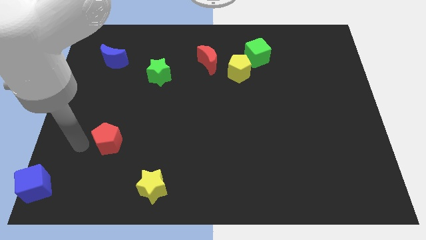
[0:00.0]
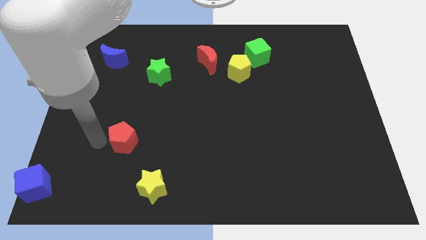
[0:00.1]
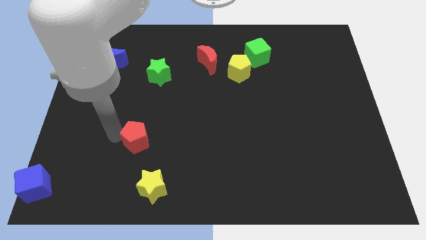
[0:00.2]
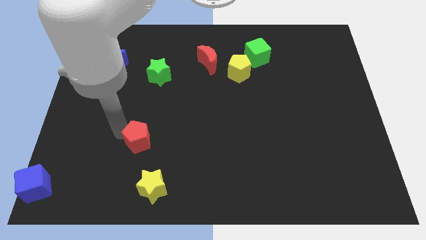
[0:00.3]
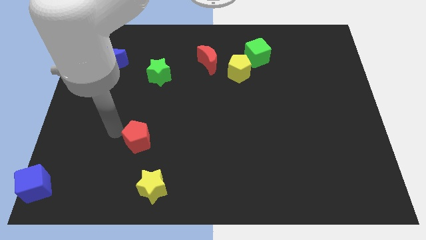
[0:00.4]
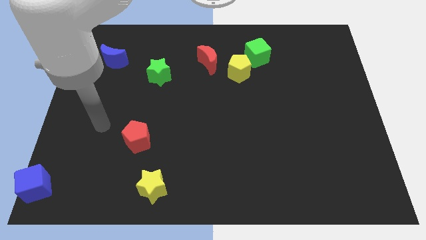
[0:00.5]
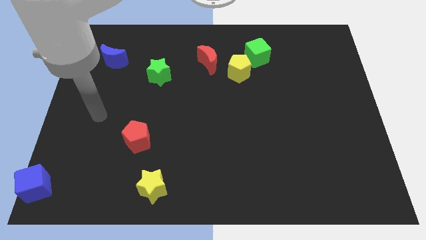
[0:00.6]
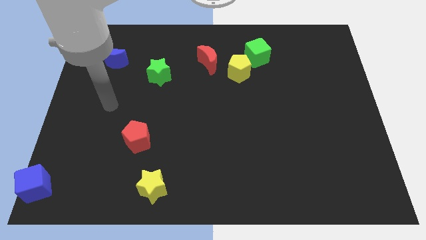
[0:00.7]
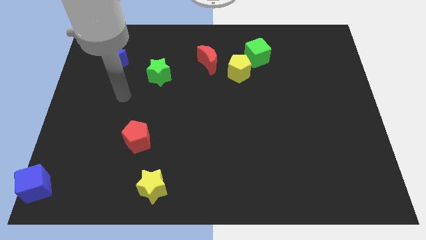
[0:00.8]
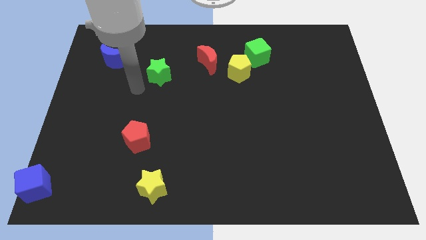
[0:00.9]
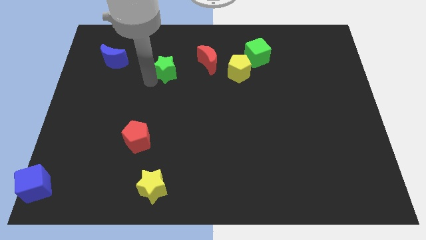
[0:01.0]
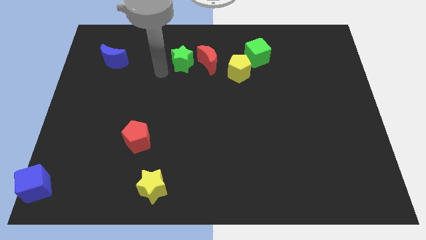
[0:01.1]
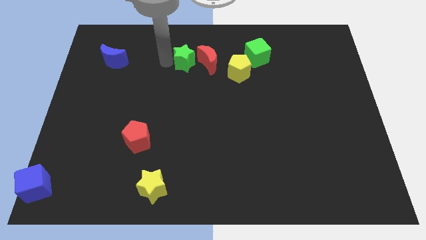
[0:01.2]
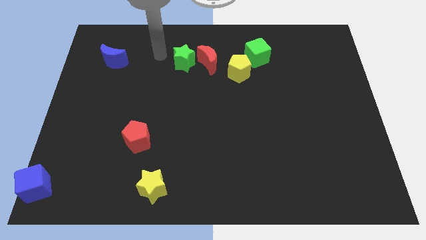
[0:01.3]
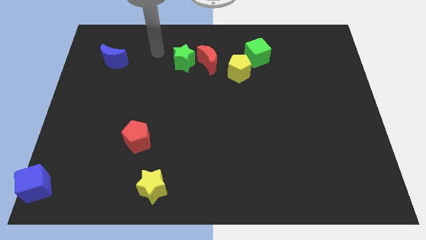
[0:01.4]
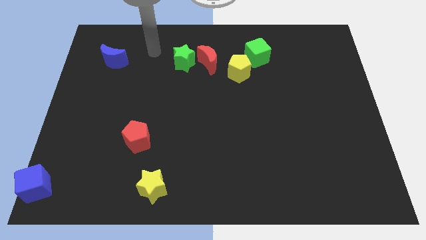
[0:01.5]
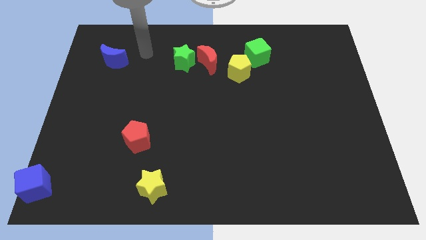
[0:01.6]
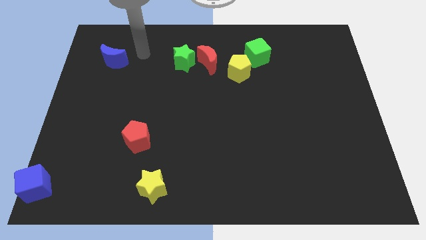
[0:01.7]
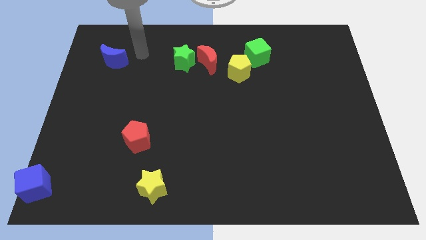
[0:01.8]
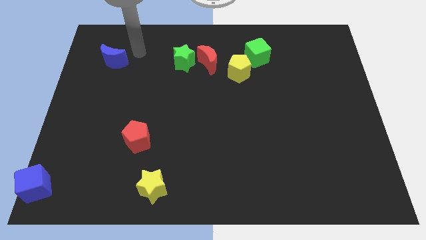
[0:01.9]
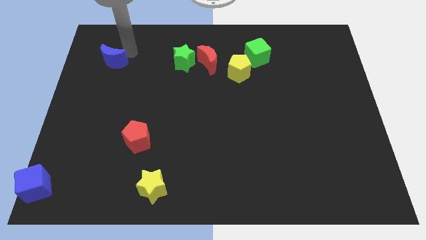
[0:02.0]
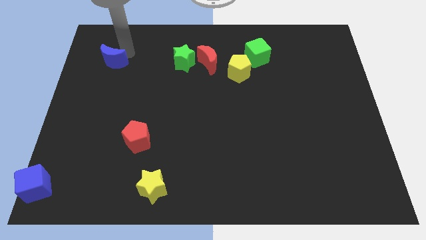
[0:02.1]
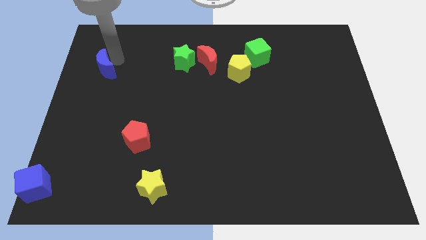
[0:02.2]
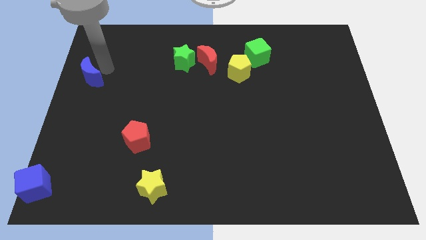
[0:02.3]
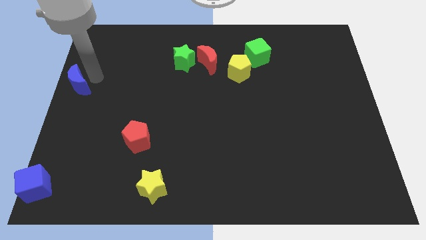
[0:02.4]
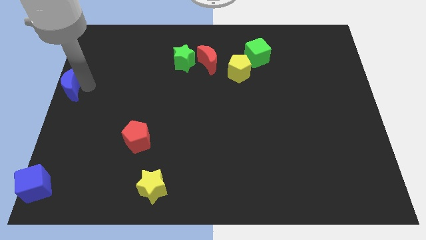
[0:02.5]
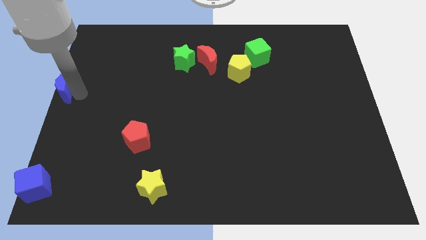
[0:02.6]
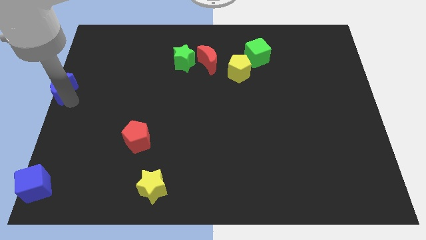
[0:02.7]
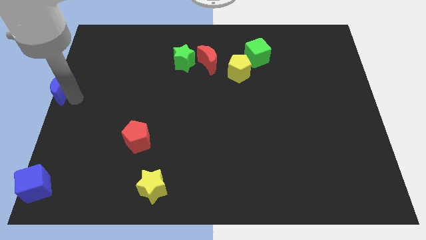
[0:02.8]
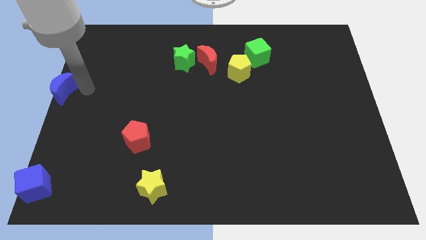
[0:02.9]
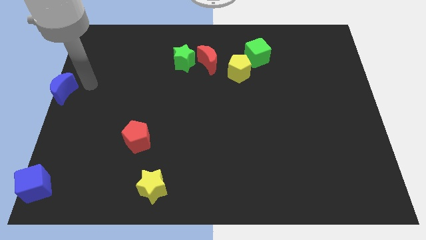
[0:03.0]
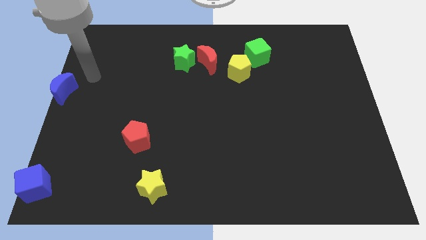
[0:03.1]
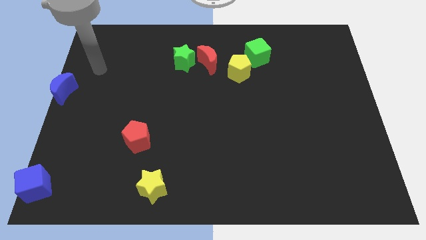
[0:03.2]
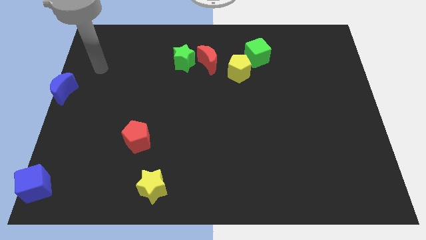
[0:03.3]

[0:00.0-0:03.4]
move the blue crescent to the left center of the board

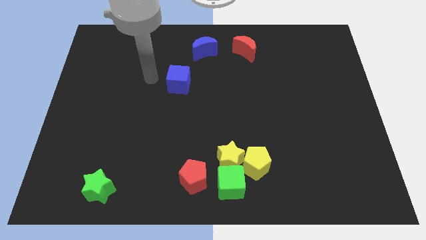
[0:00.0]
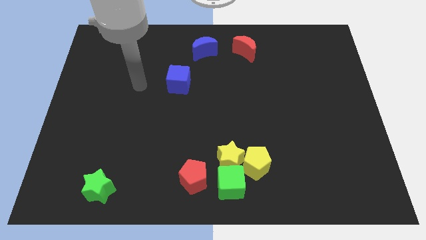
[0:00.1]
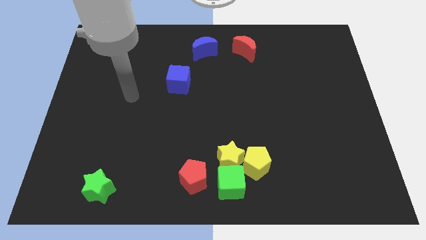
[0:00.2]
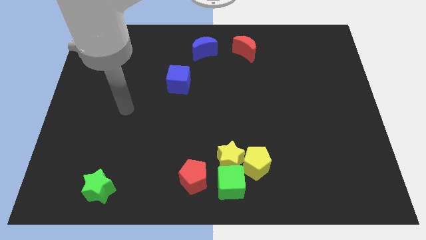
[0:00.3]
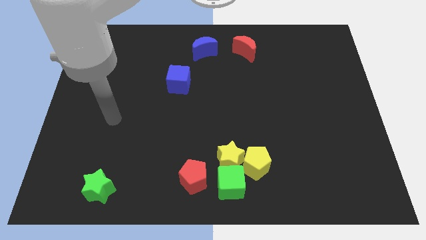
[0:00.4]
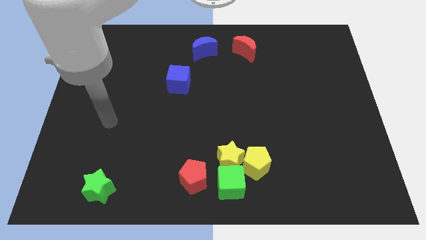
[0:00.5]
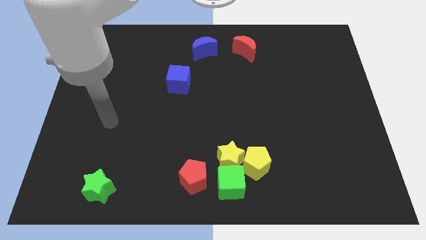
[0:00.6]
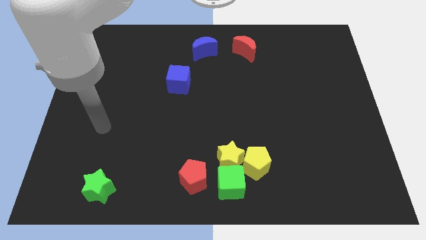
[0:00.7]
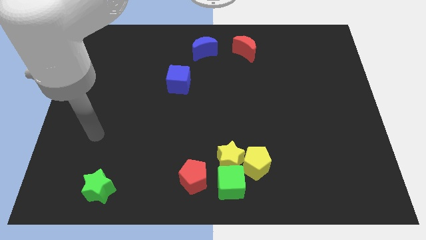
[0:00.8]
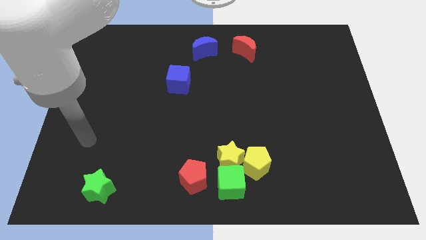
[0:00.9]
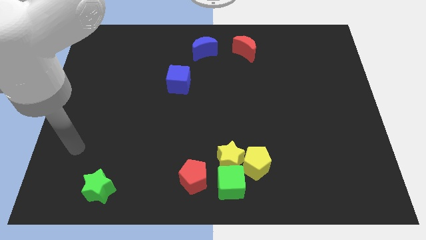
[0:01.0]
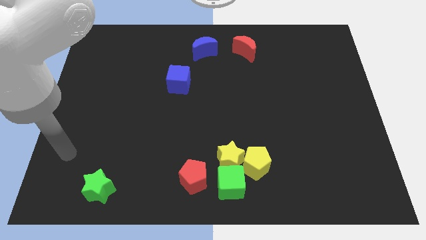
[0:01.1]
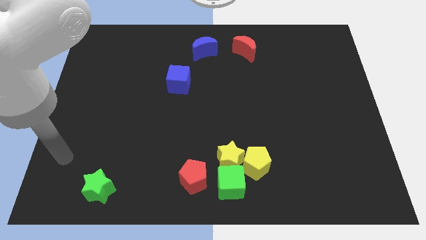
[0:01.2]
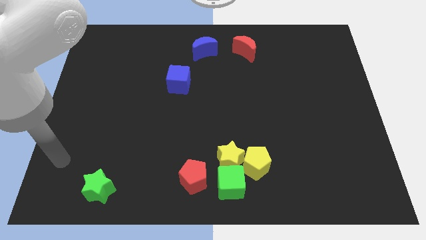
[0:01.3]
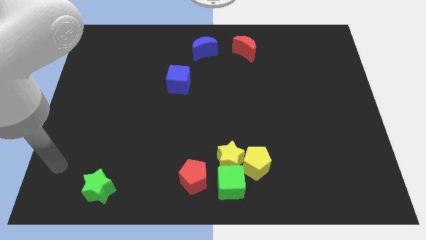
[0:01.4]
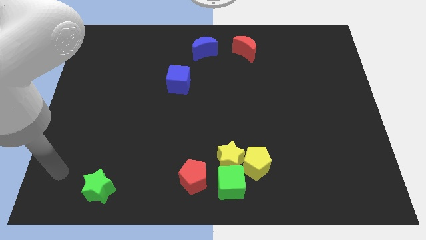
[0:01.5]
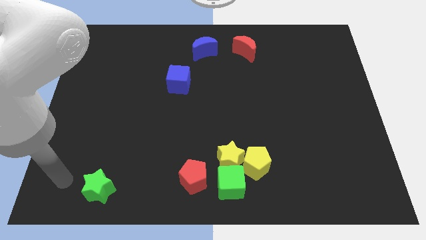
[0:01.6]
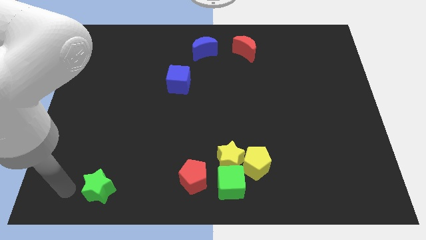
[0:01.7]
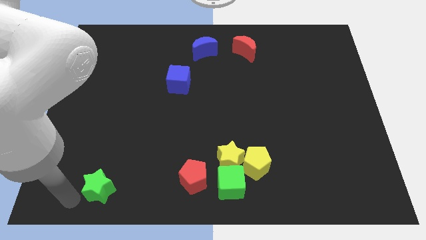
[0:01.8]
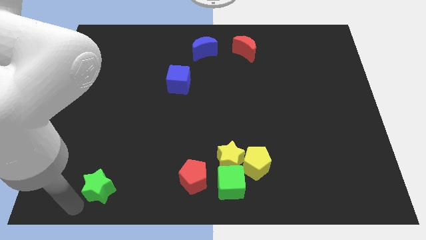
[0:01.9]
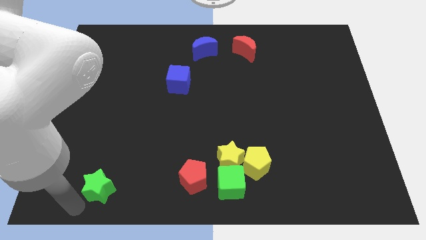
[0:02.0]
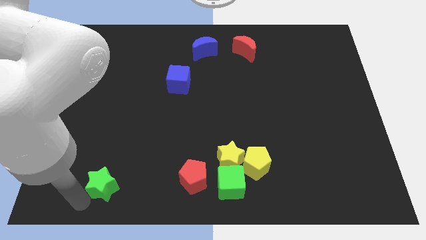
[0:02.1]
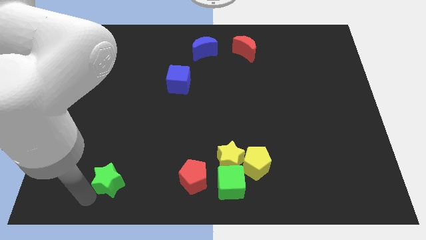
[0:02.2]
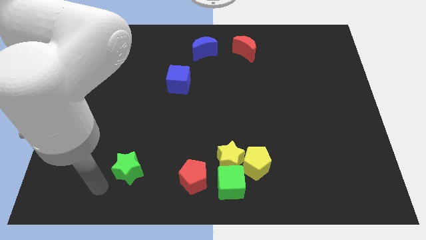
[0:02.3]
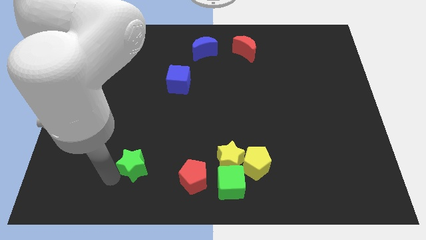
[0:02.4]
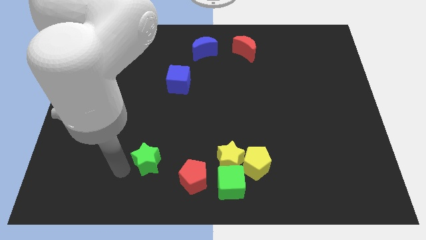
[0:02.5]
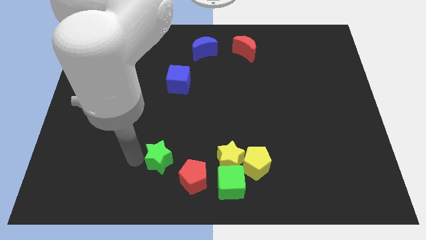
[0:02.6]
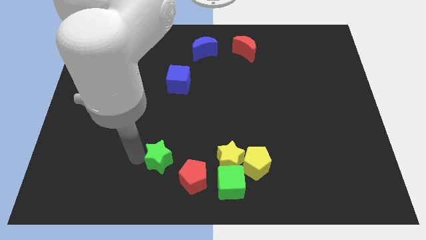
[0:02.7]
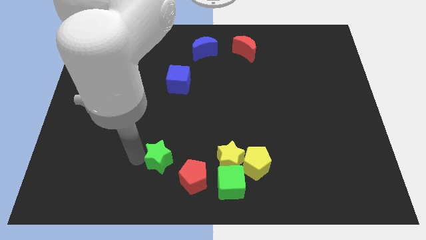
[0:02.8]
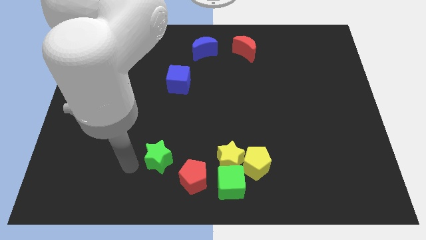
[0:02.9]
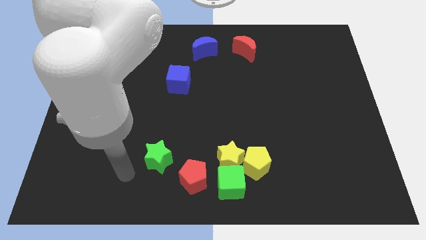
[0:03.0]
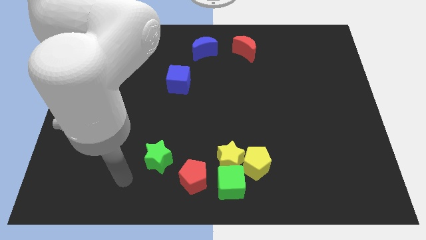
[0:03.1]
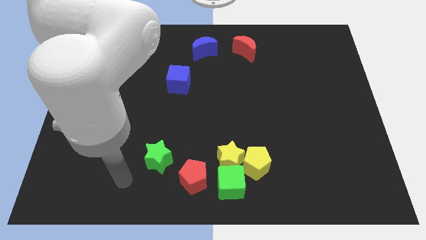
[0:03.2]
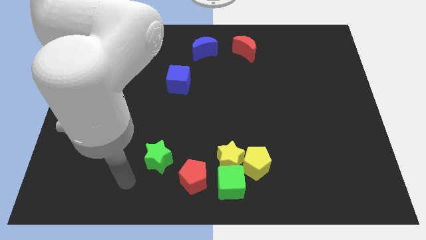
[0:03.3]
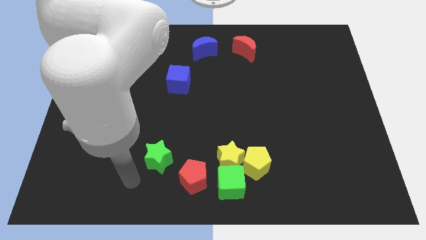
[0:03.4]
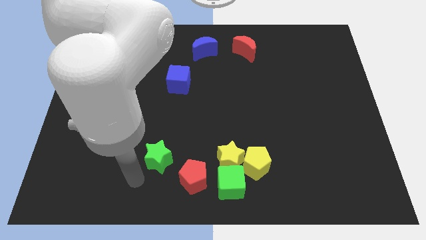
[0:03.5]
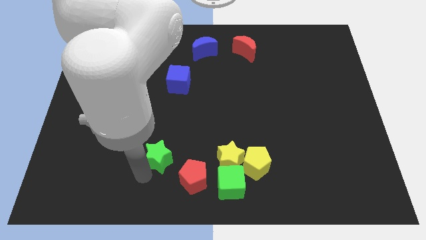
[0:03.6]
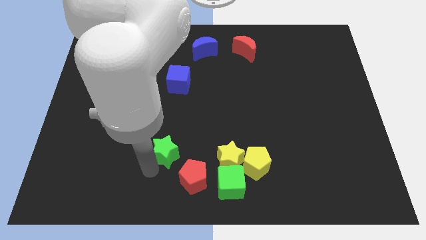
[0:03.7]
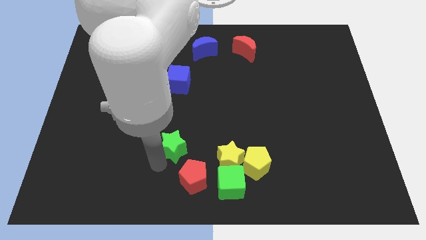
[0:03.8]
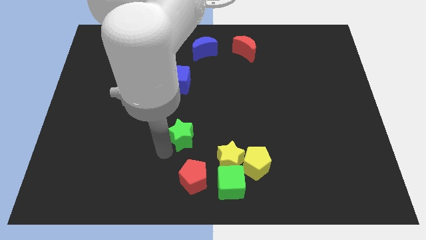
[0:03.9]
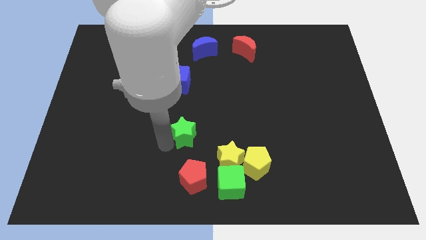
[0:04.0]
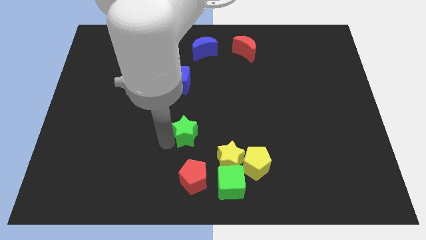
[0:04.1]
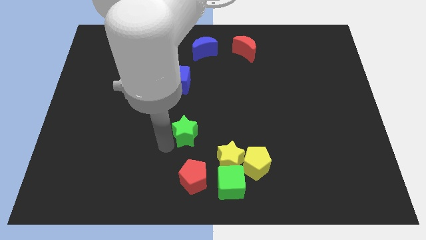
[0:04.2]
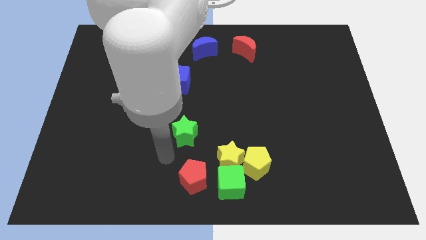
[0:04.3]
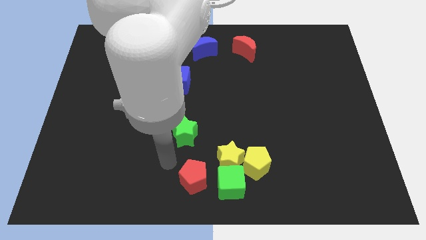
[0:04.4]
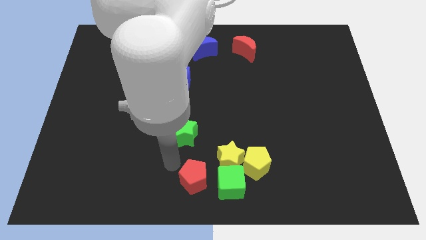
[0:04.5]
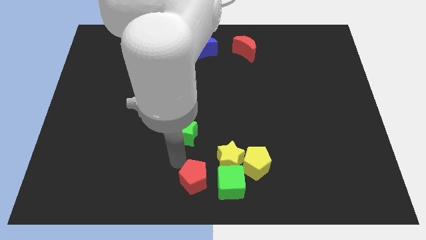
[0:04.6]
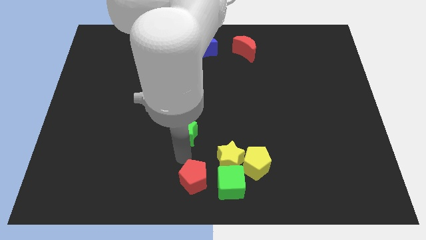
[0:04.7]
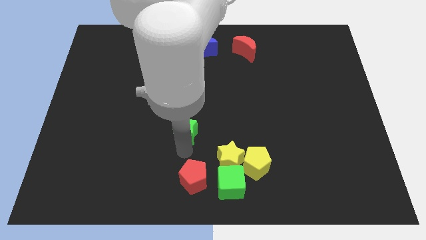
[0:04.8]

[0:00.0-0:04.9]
place the green star below the blue cube

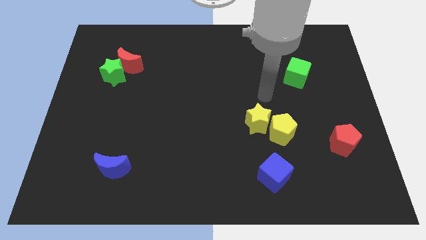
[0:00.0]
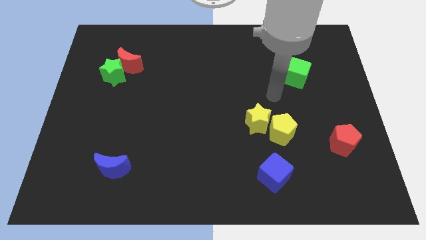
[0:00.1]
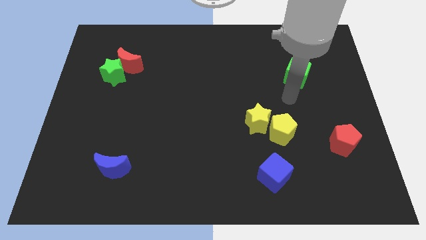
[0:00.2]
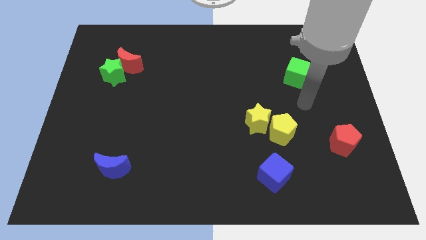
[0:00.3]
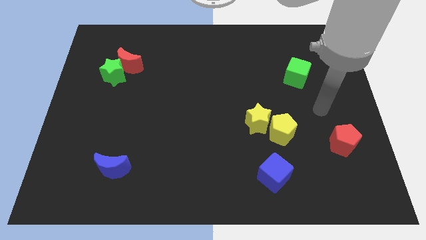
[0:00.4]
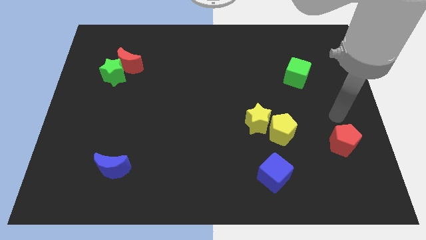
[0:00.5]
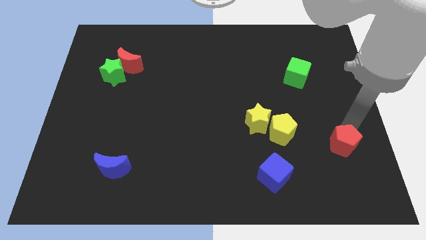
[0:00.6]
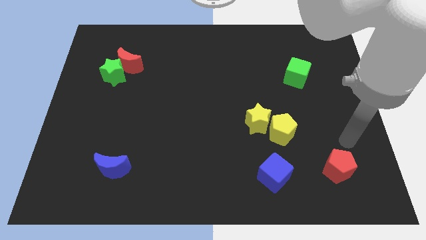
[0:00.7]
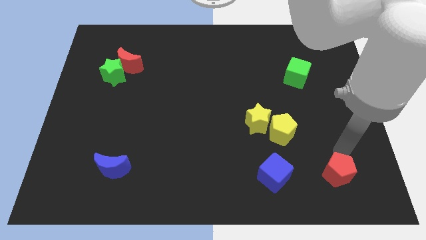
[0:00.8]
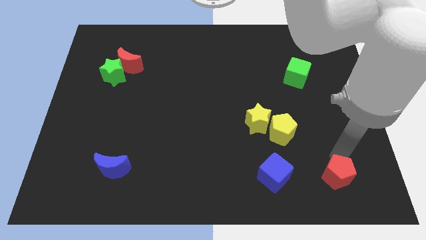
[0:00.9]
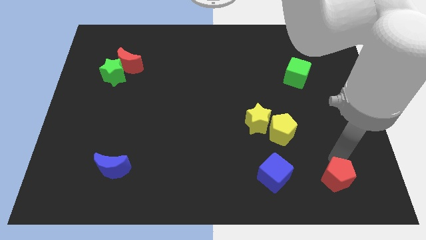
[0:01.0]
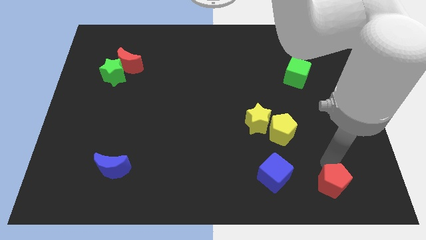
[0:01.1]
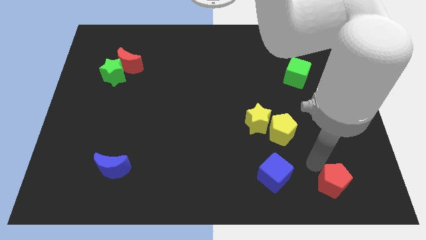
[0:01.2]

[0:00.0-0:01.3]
place the red pentagon parallel to blue cube
